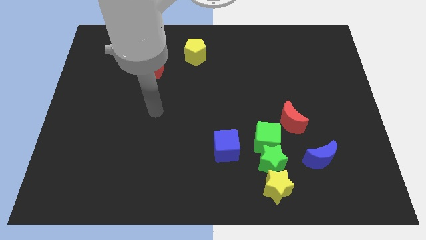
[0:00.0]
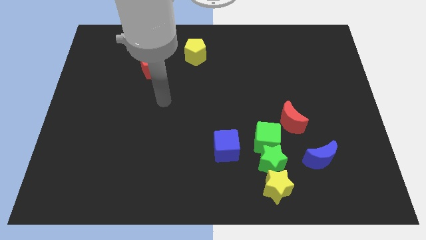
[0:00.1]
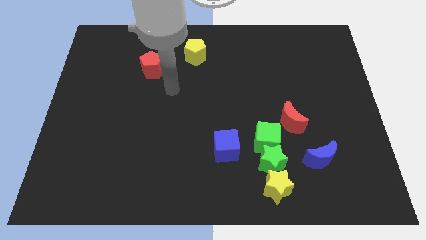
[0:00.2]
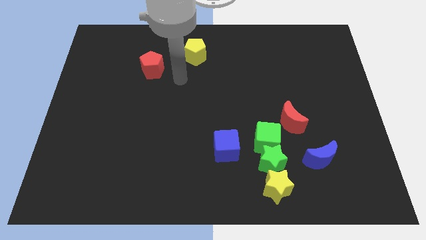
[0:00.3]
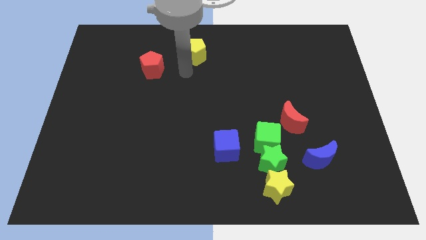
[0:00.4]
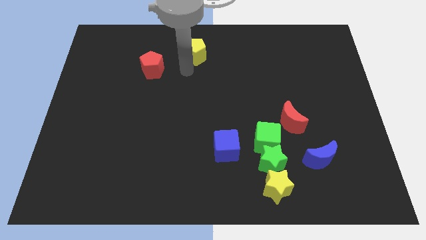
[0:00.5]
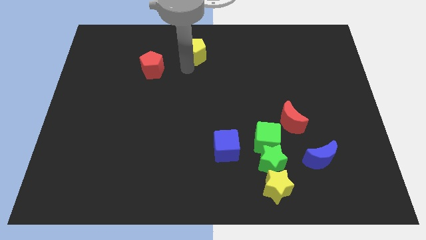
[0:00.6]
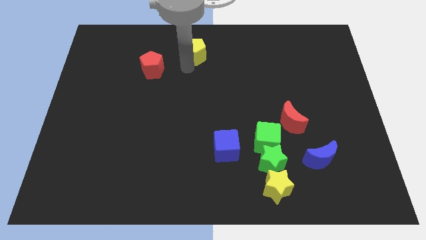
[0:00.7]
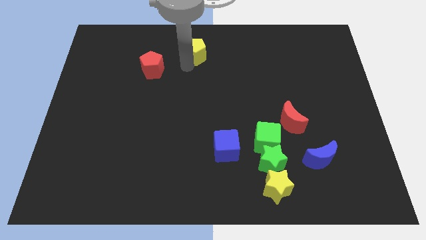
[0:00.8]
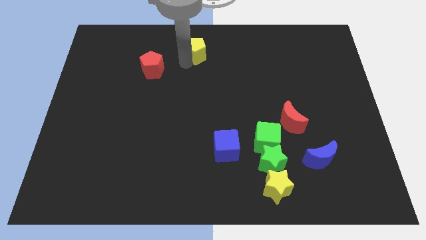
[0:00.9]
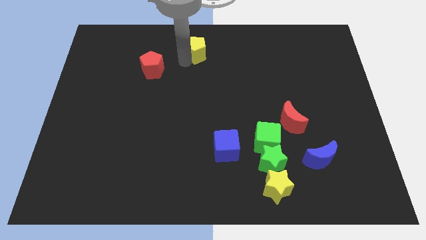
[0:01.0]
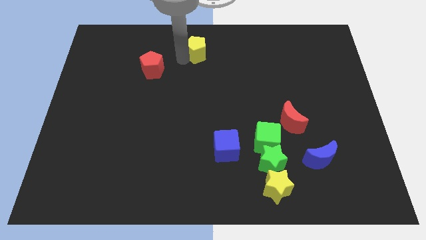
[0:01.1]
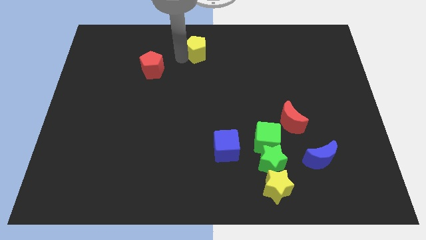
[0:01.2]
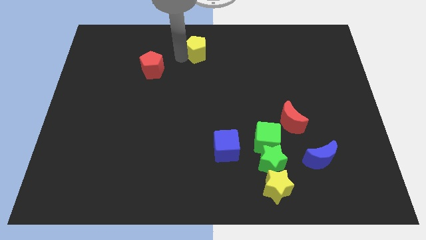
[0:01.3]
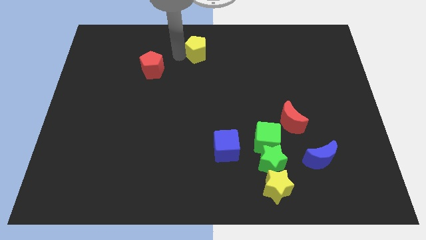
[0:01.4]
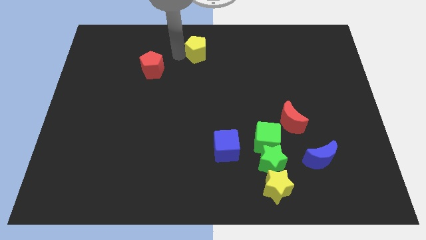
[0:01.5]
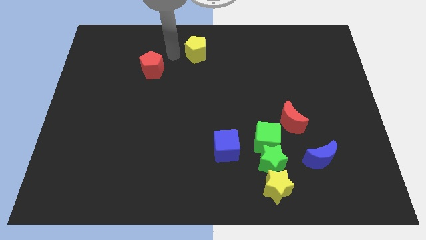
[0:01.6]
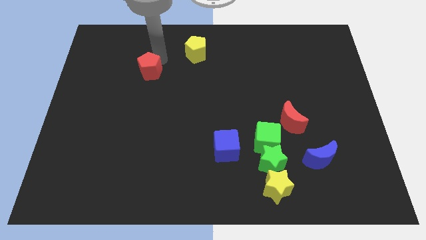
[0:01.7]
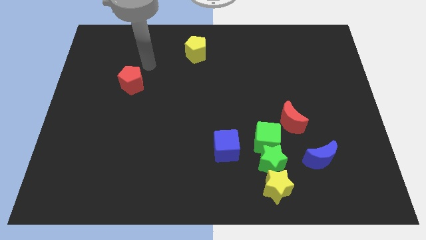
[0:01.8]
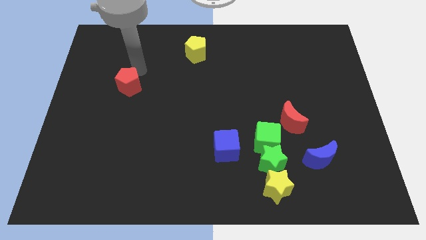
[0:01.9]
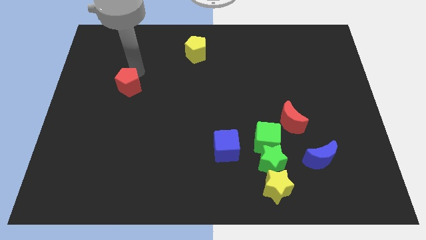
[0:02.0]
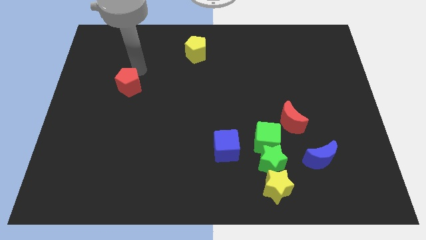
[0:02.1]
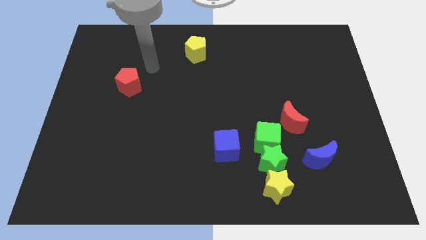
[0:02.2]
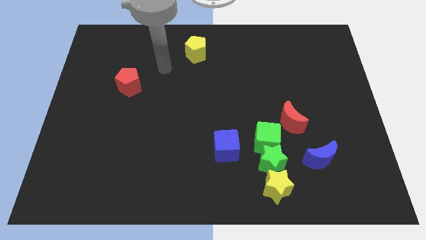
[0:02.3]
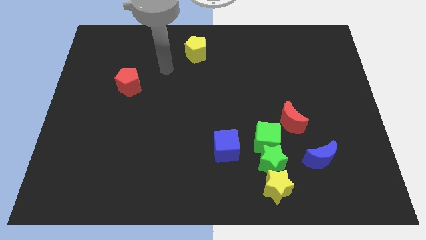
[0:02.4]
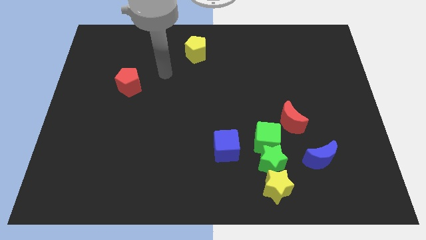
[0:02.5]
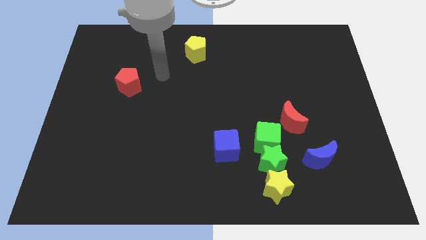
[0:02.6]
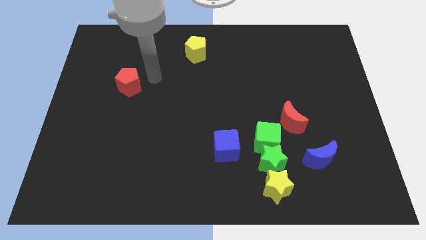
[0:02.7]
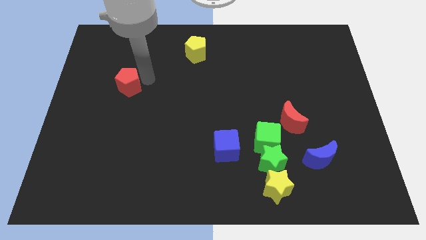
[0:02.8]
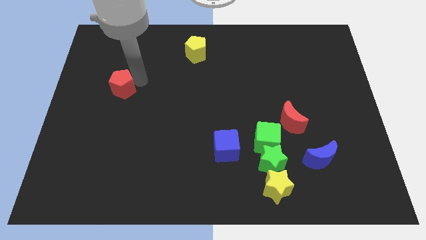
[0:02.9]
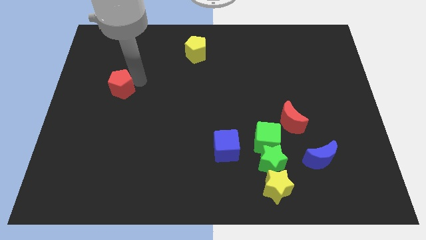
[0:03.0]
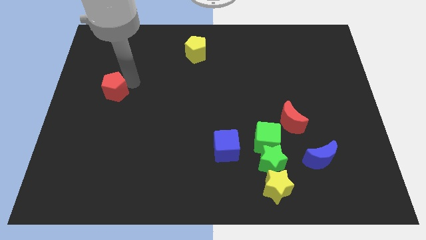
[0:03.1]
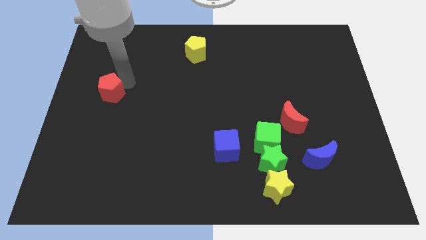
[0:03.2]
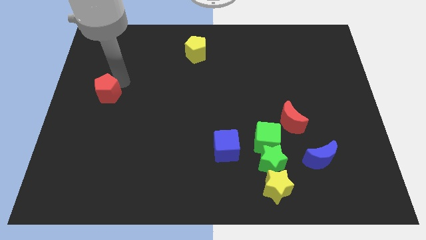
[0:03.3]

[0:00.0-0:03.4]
move the red pentagon away from the yellow pentagon

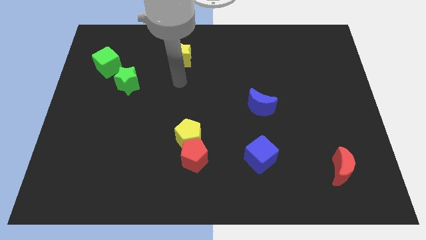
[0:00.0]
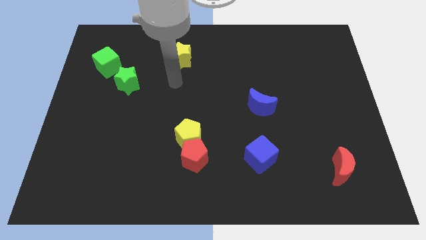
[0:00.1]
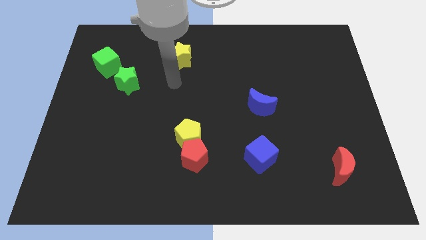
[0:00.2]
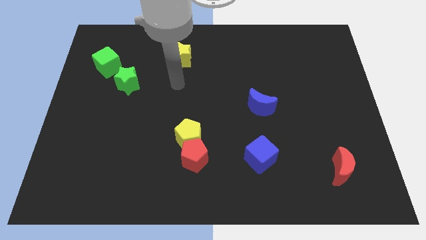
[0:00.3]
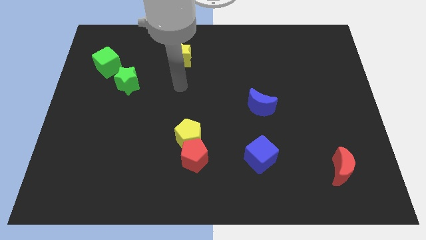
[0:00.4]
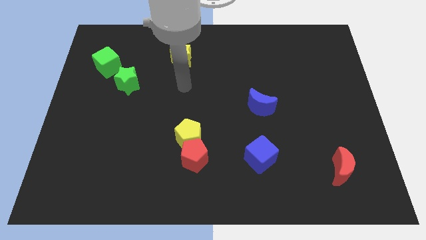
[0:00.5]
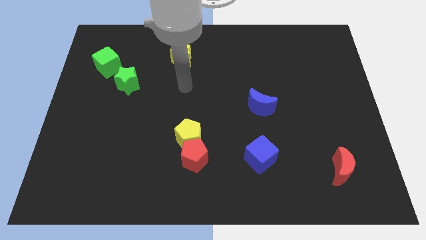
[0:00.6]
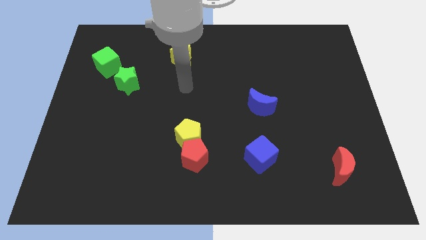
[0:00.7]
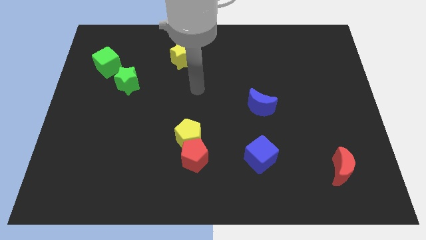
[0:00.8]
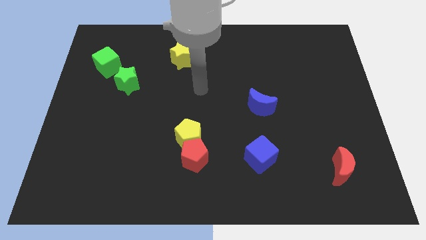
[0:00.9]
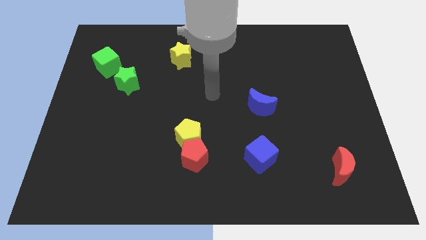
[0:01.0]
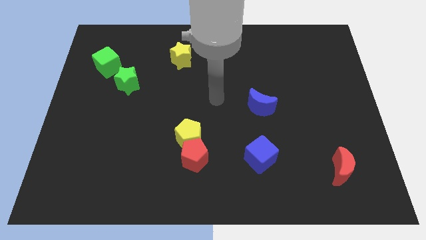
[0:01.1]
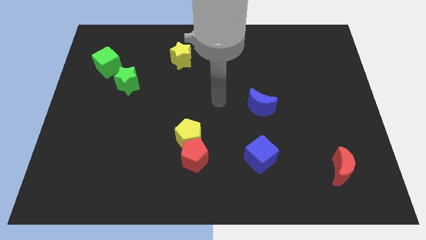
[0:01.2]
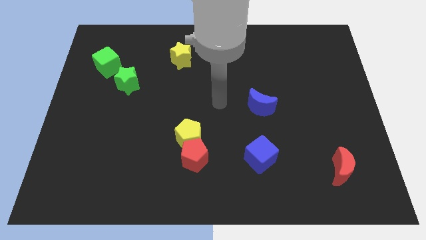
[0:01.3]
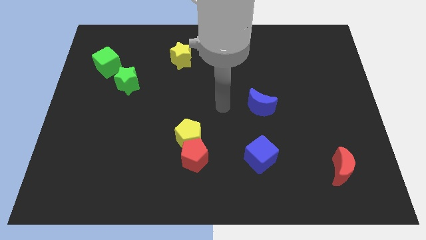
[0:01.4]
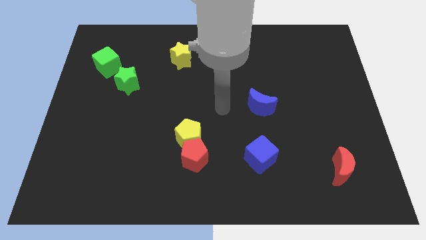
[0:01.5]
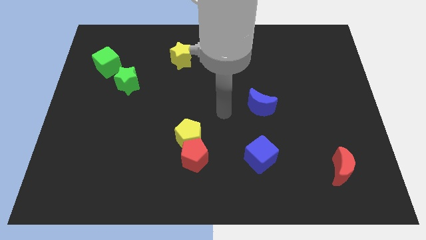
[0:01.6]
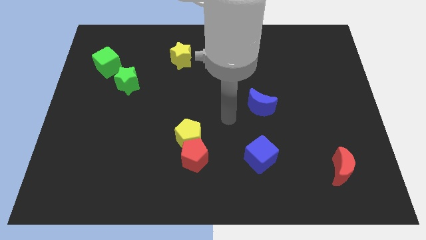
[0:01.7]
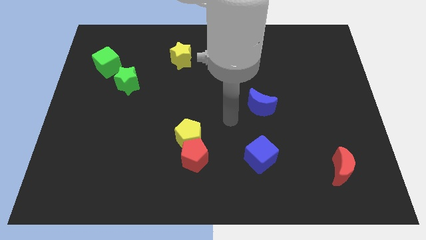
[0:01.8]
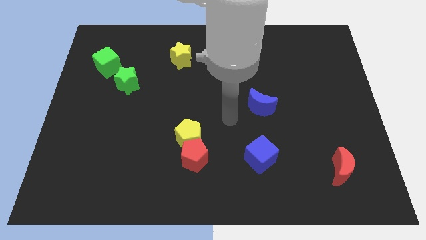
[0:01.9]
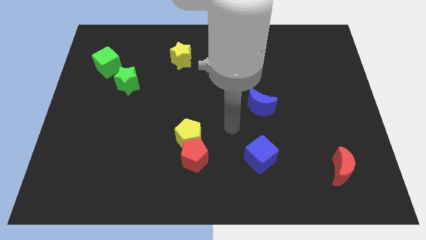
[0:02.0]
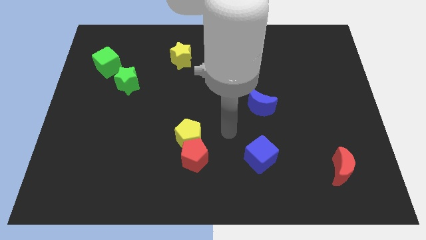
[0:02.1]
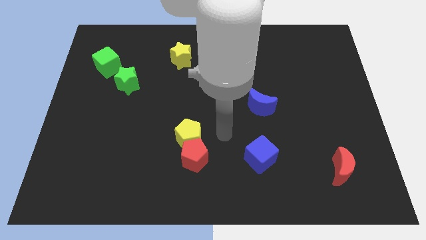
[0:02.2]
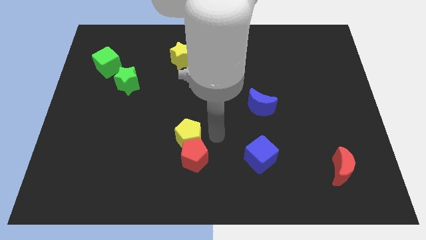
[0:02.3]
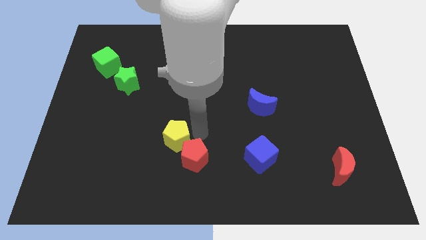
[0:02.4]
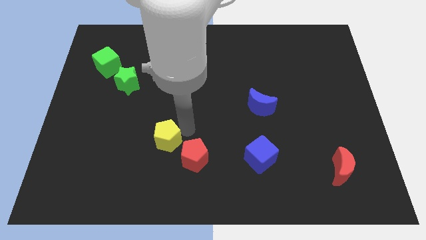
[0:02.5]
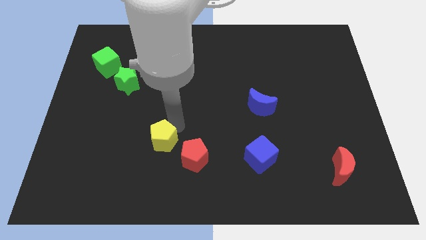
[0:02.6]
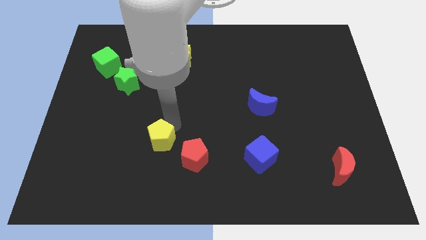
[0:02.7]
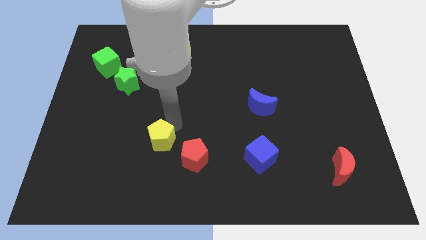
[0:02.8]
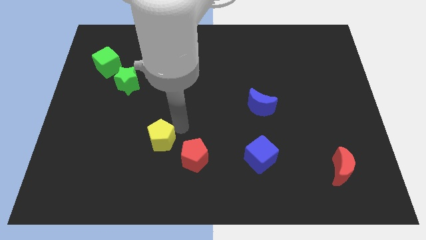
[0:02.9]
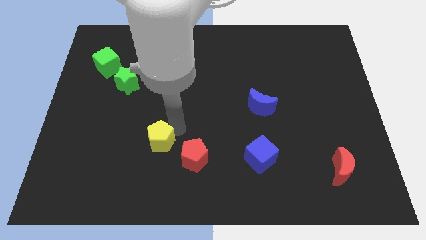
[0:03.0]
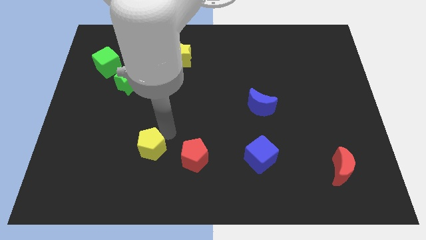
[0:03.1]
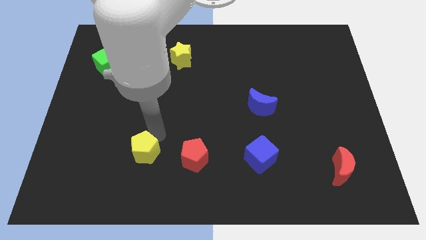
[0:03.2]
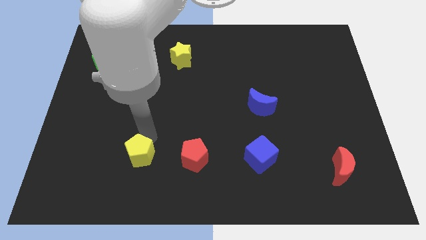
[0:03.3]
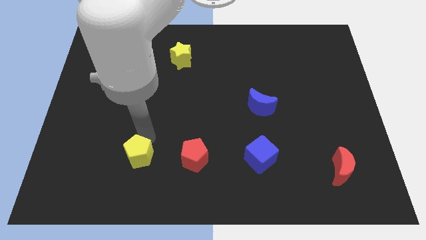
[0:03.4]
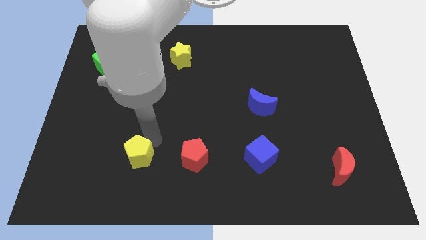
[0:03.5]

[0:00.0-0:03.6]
separate the yellow pentagon from the red pentagon

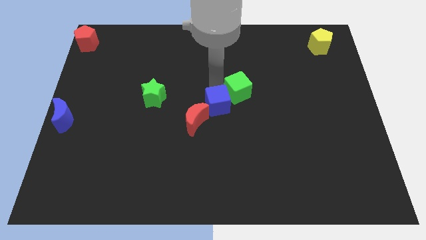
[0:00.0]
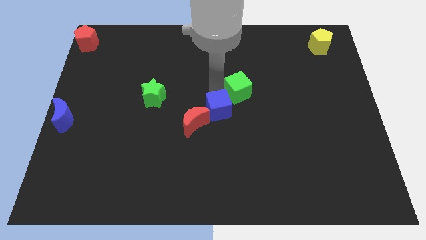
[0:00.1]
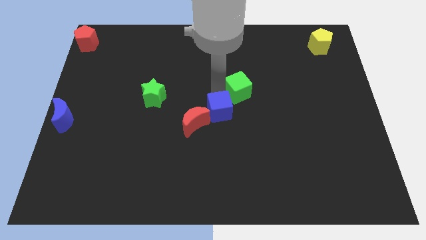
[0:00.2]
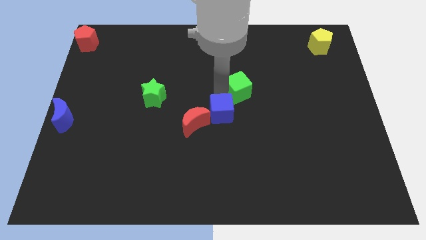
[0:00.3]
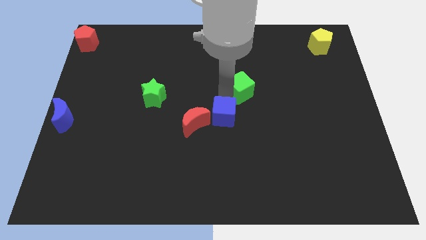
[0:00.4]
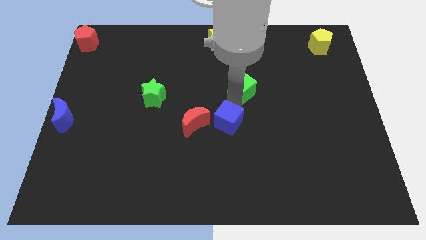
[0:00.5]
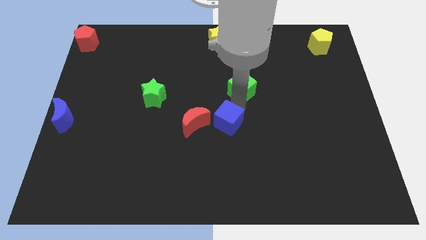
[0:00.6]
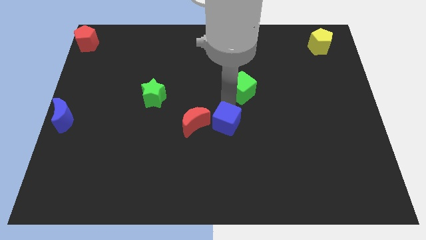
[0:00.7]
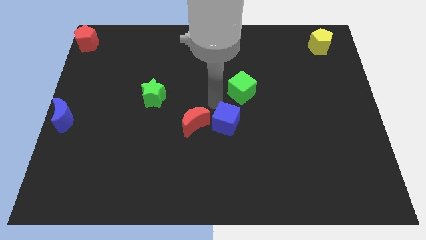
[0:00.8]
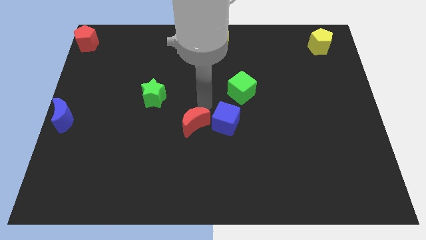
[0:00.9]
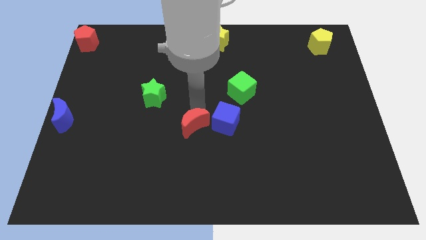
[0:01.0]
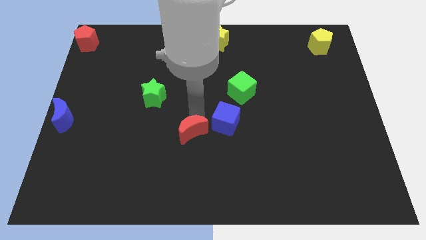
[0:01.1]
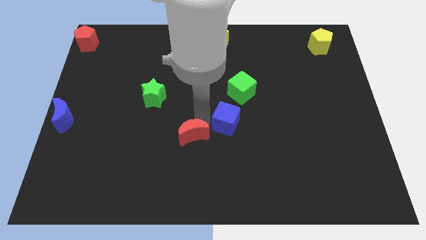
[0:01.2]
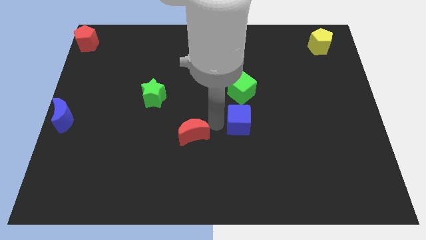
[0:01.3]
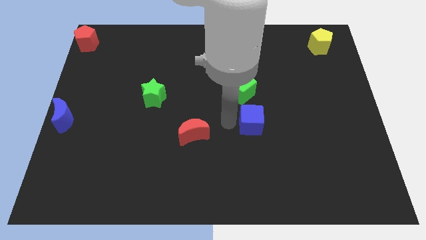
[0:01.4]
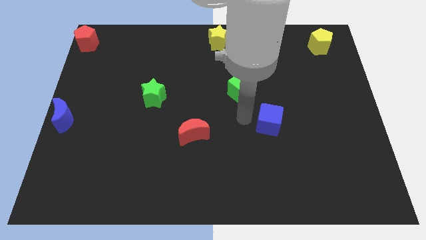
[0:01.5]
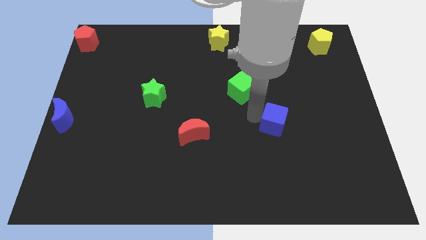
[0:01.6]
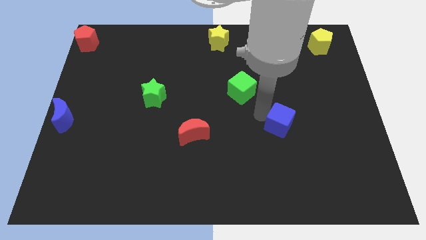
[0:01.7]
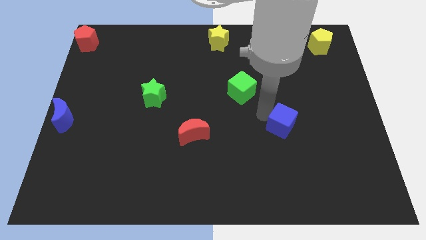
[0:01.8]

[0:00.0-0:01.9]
separate blue cube from red moon and green cube

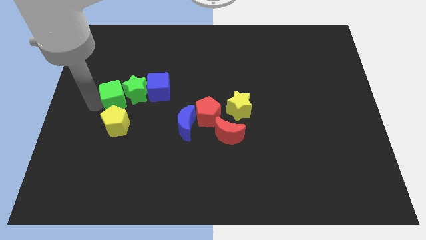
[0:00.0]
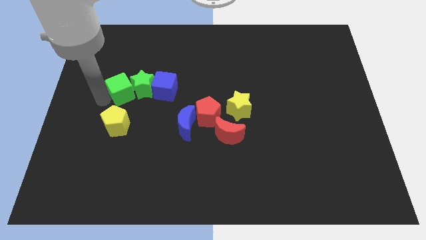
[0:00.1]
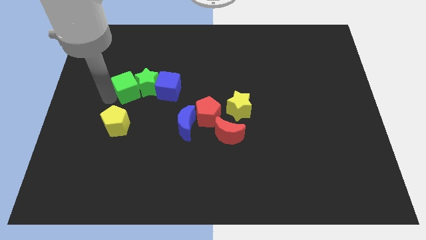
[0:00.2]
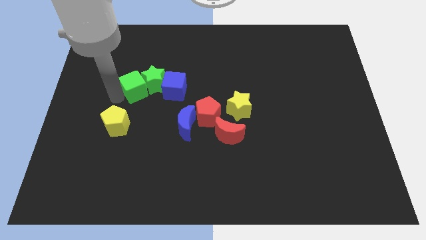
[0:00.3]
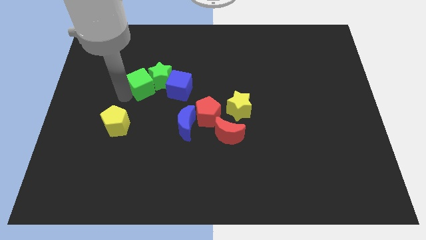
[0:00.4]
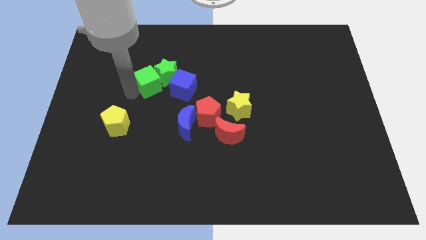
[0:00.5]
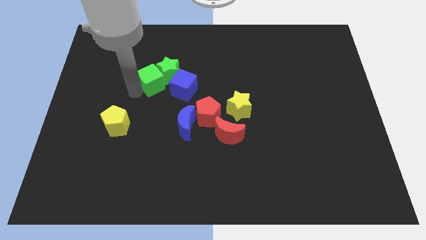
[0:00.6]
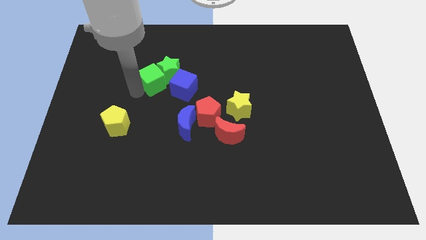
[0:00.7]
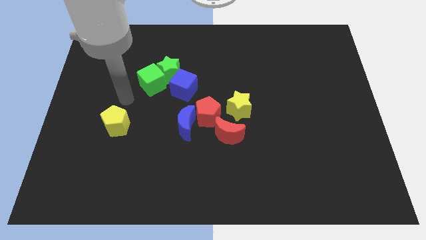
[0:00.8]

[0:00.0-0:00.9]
move the green blocks above the blue cube
